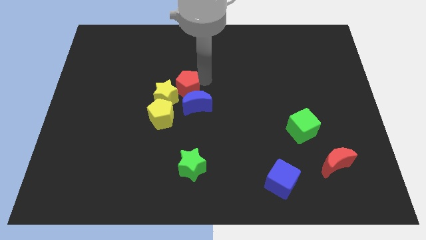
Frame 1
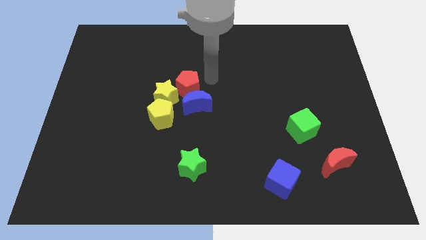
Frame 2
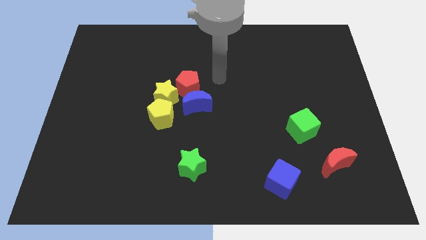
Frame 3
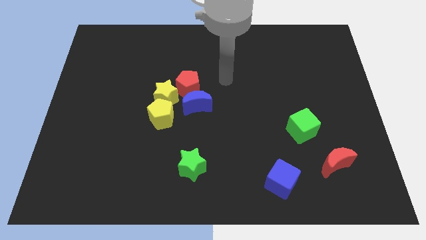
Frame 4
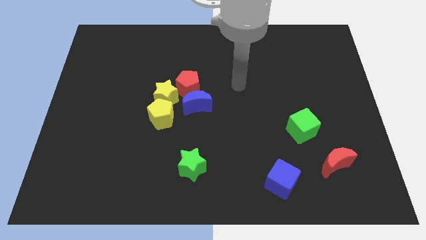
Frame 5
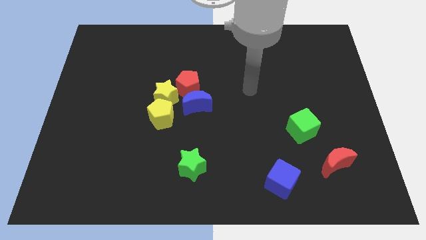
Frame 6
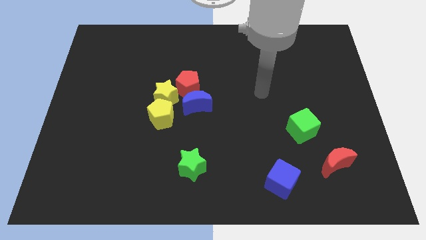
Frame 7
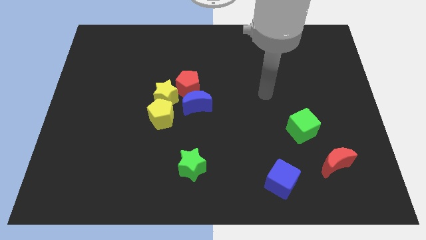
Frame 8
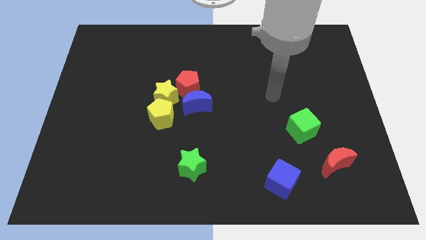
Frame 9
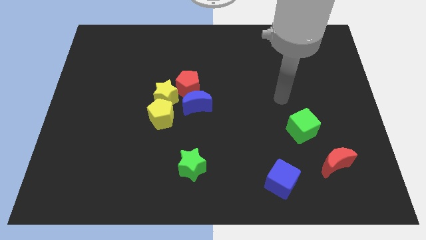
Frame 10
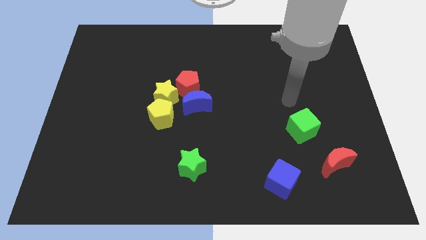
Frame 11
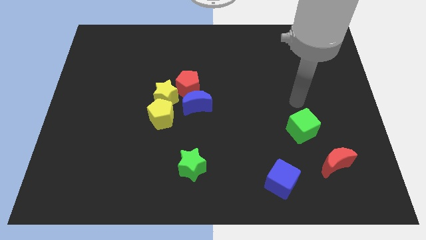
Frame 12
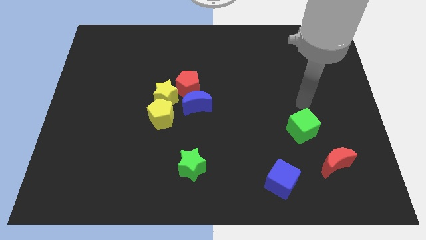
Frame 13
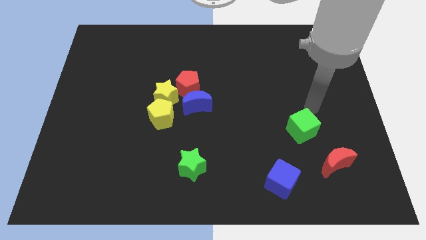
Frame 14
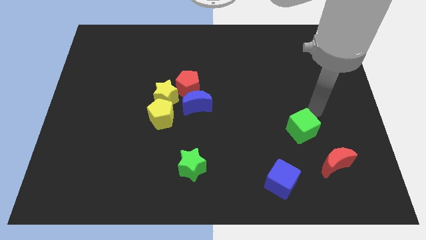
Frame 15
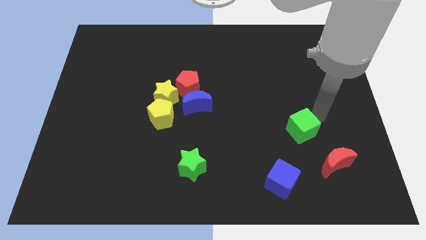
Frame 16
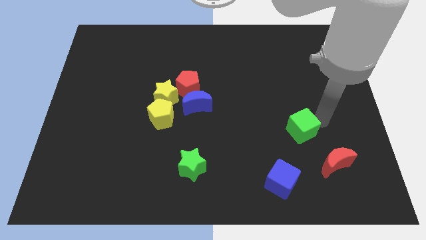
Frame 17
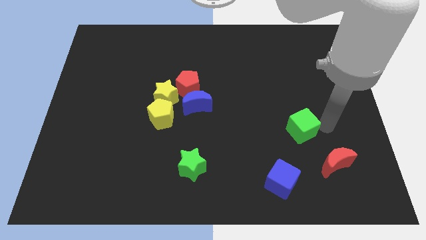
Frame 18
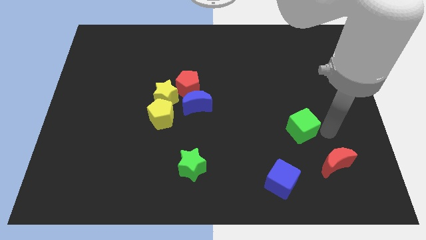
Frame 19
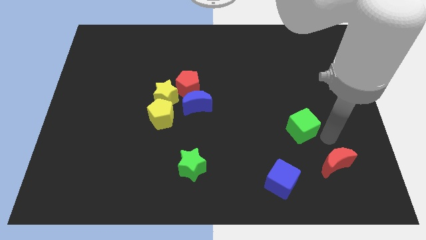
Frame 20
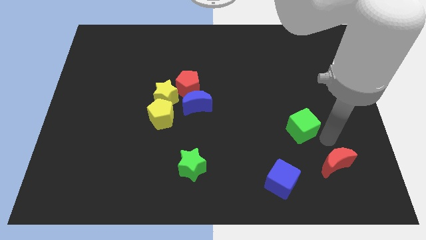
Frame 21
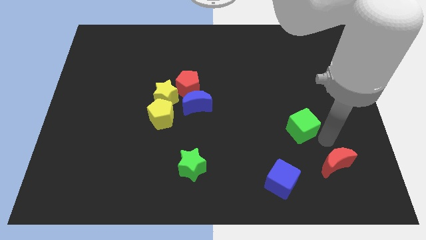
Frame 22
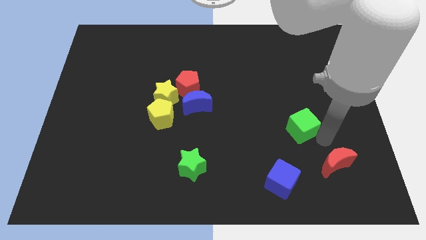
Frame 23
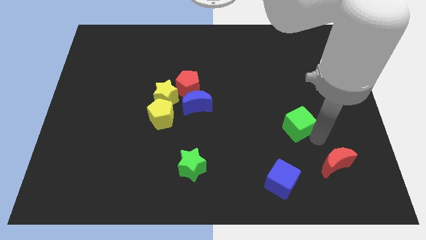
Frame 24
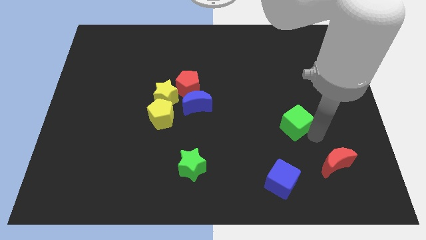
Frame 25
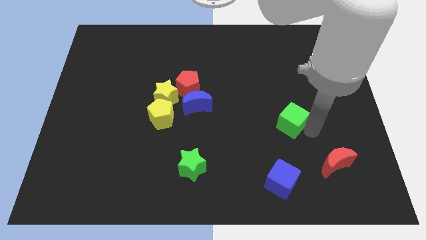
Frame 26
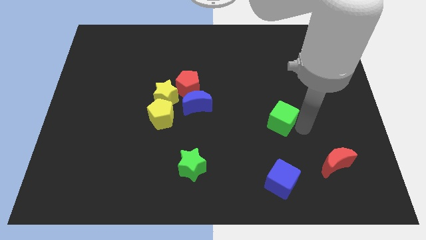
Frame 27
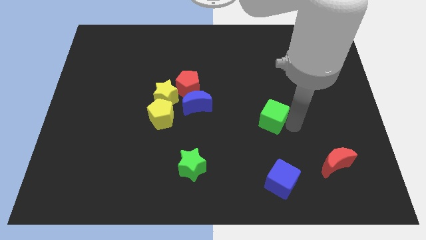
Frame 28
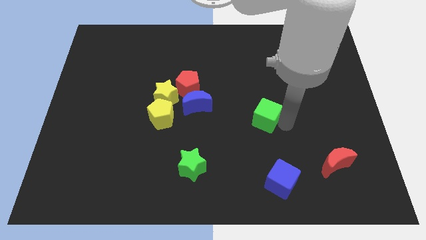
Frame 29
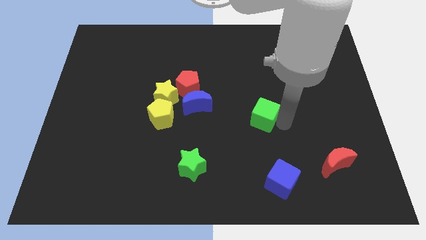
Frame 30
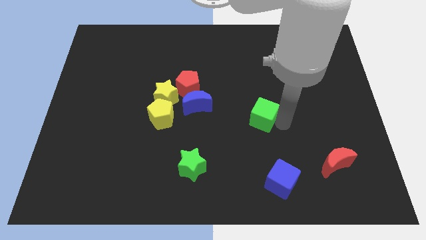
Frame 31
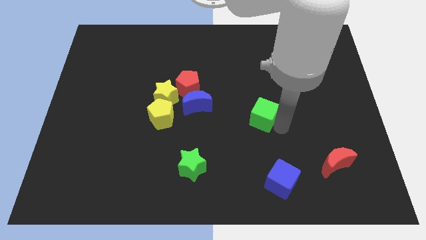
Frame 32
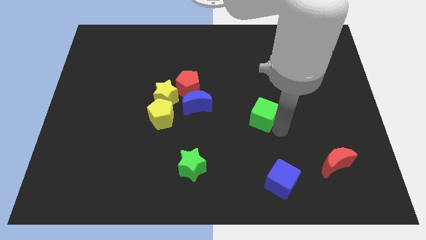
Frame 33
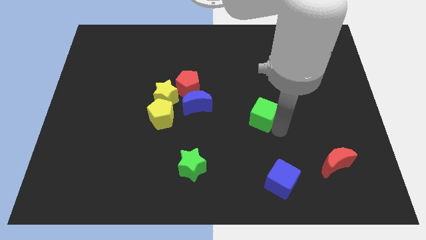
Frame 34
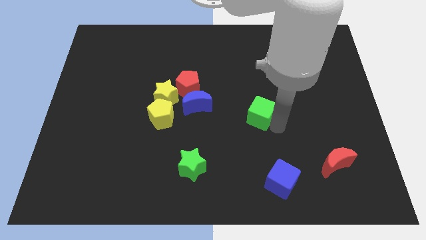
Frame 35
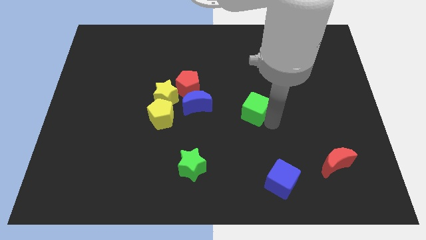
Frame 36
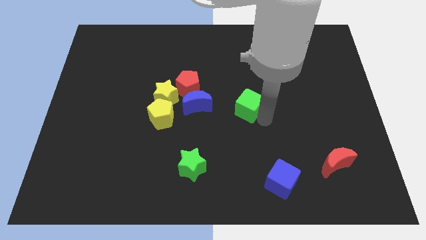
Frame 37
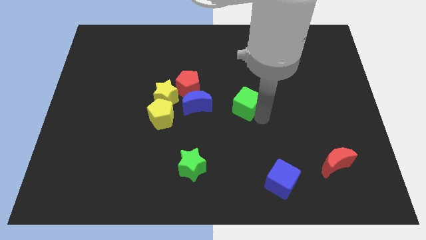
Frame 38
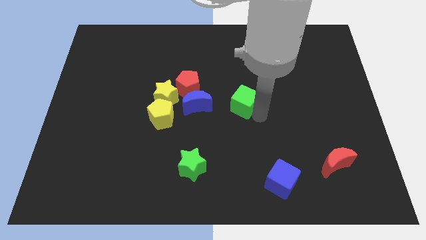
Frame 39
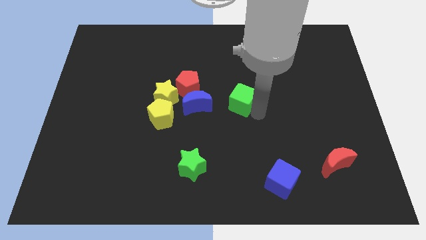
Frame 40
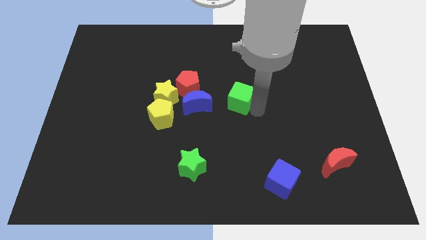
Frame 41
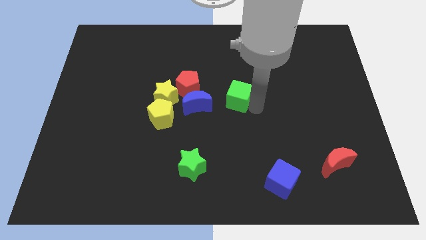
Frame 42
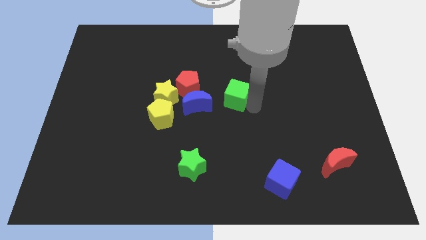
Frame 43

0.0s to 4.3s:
push the green cube towards the blue crescent

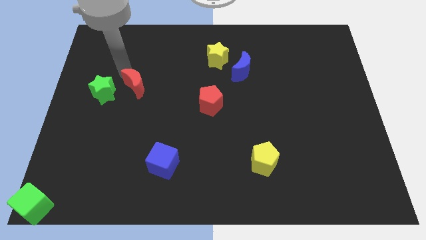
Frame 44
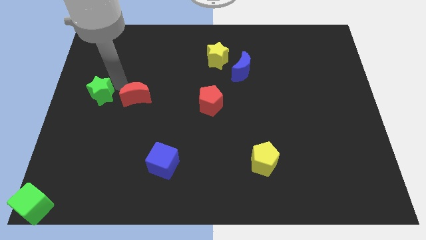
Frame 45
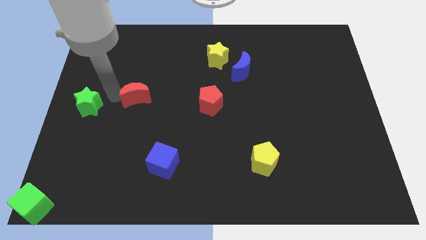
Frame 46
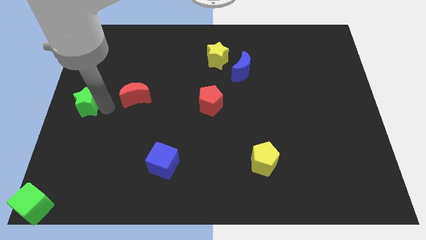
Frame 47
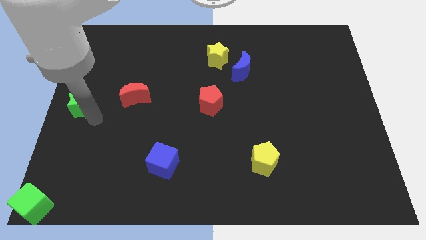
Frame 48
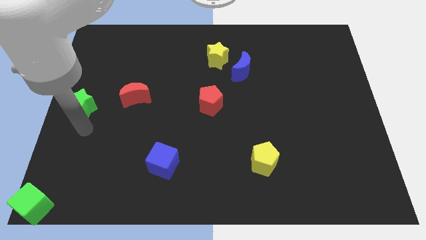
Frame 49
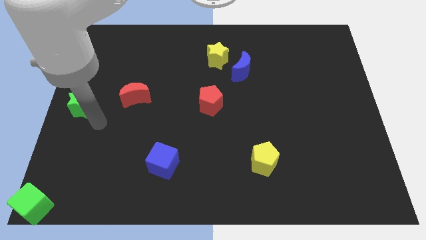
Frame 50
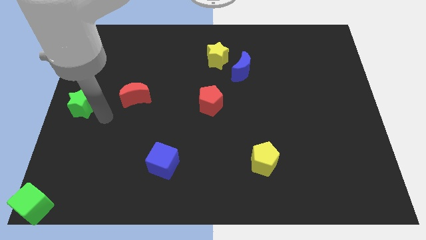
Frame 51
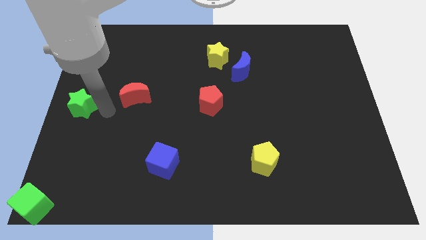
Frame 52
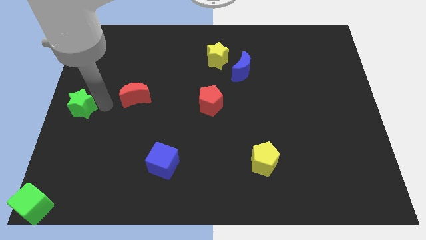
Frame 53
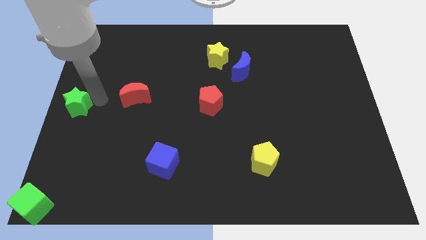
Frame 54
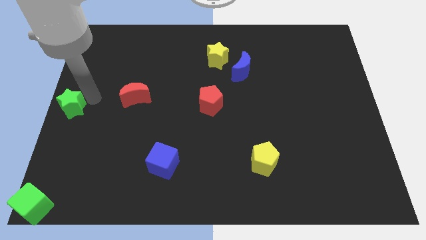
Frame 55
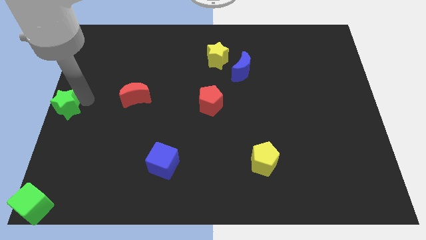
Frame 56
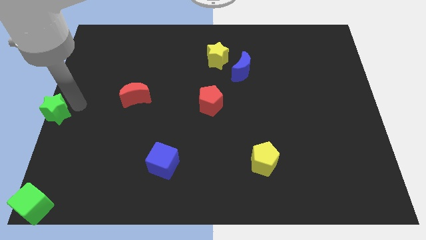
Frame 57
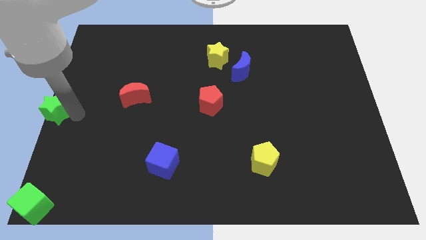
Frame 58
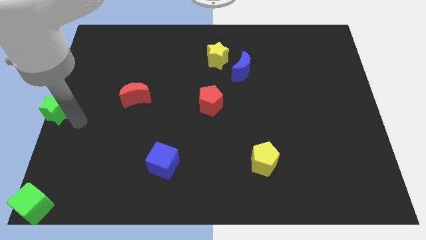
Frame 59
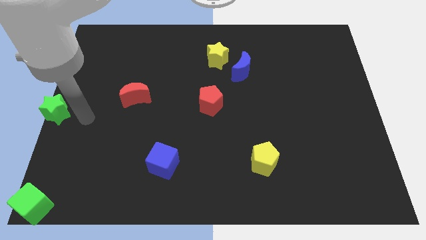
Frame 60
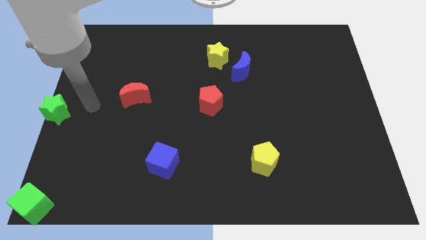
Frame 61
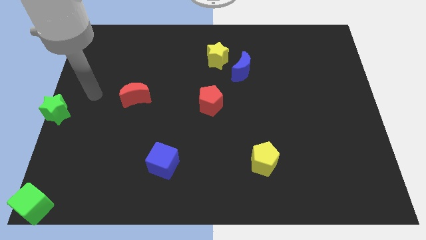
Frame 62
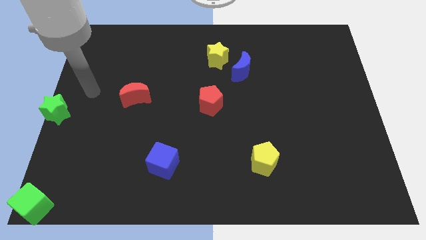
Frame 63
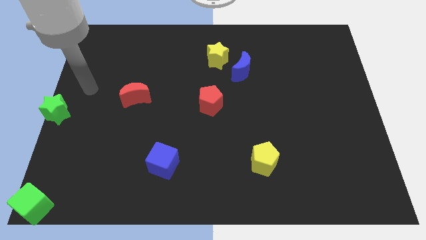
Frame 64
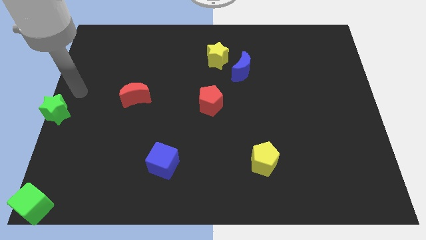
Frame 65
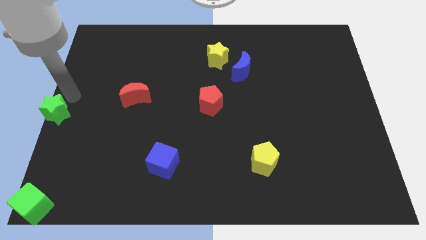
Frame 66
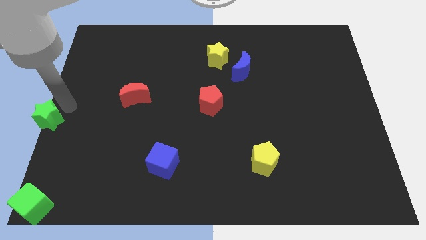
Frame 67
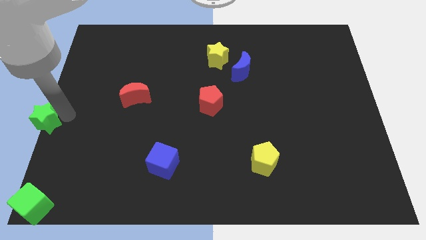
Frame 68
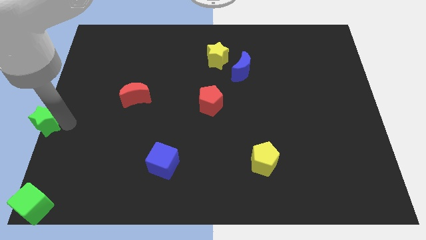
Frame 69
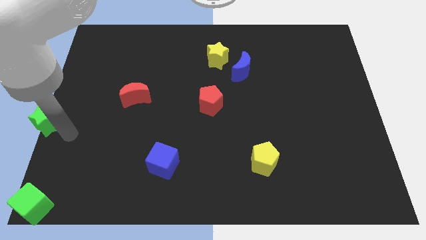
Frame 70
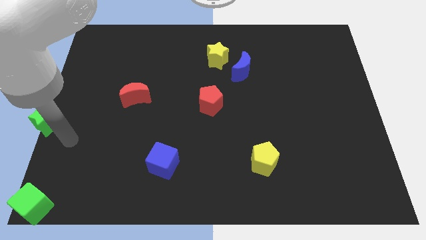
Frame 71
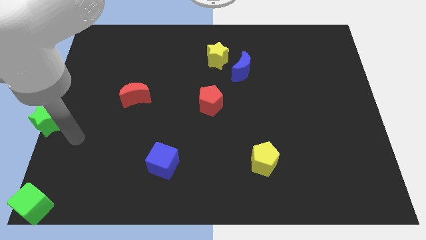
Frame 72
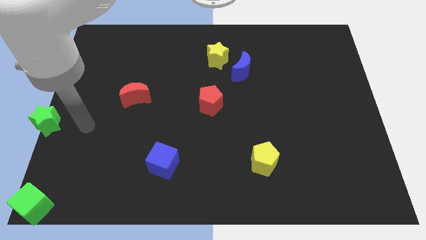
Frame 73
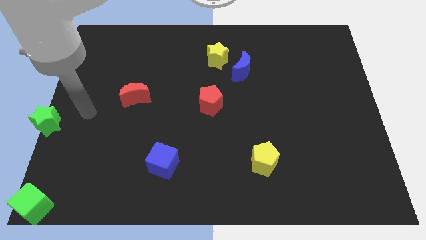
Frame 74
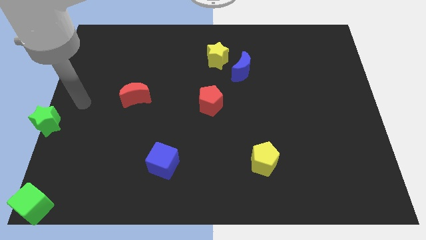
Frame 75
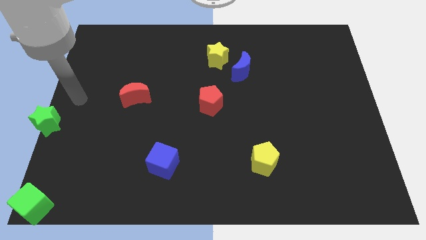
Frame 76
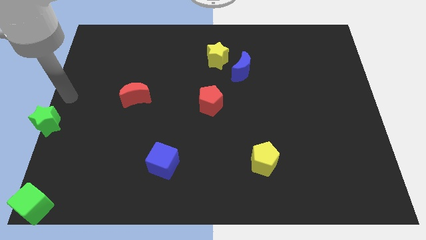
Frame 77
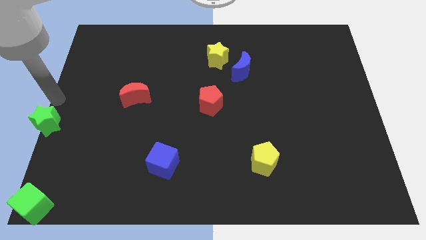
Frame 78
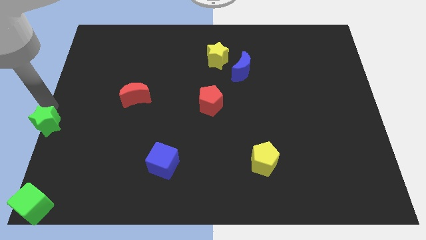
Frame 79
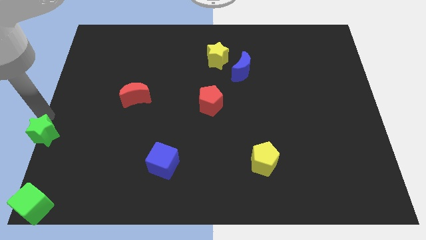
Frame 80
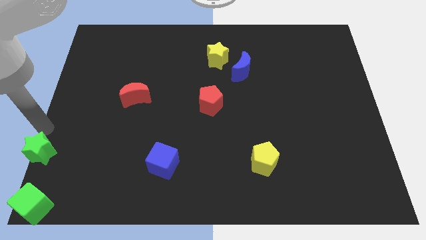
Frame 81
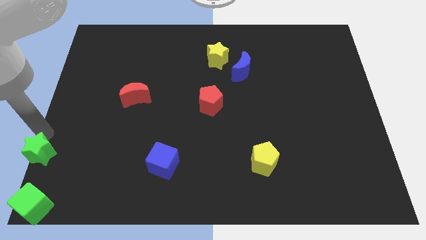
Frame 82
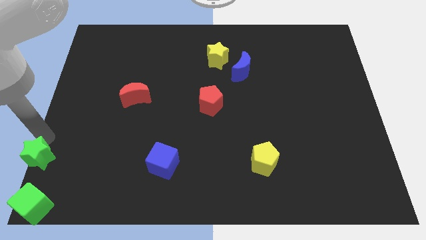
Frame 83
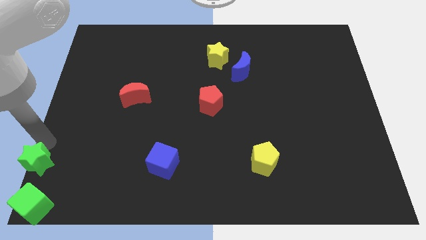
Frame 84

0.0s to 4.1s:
place the green star on top of the green cube

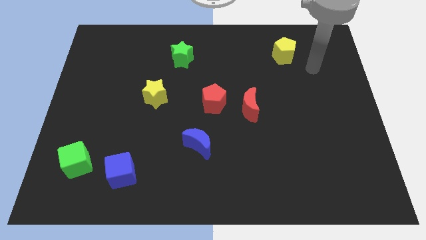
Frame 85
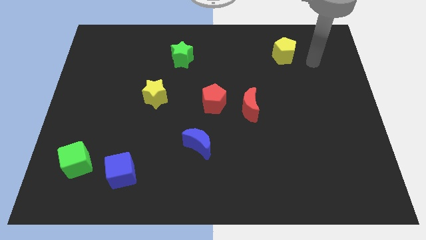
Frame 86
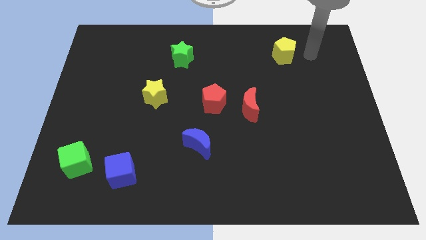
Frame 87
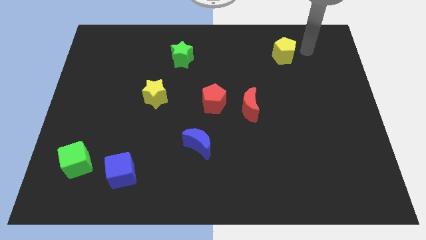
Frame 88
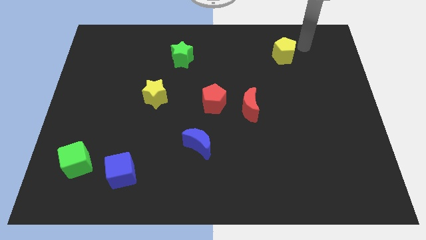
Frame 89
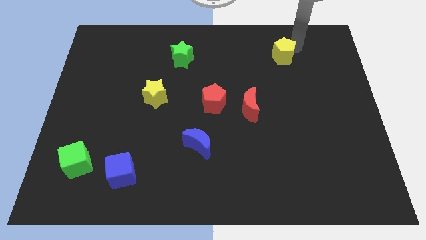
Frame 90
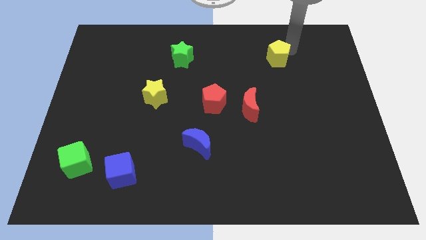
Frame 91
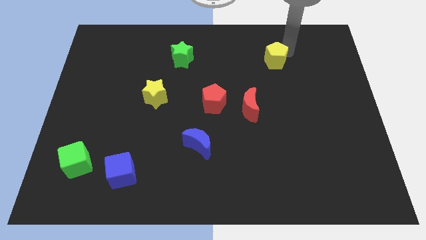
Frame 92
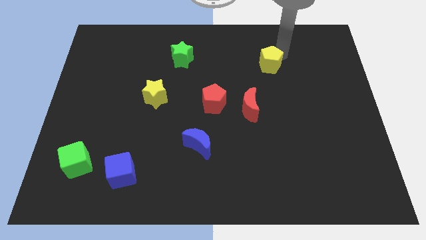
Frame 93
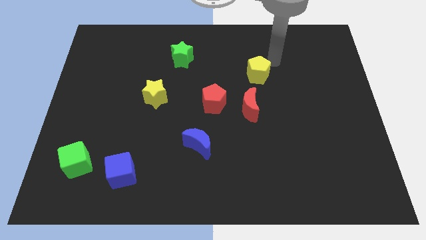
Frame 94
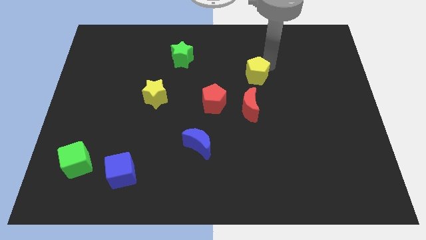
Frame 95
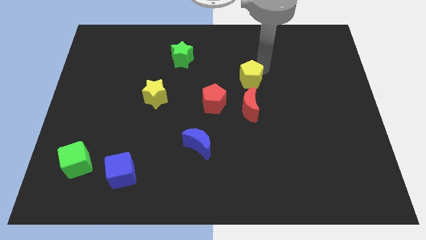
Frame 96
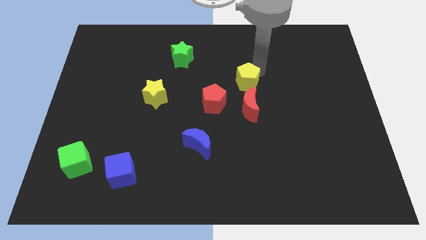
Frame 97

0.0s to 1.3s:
push the yellow pentagon to the top of the red crescent
